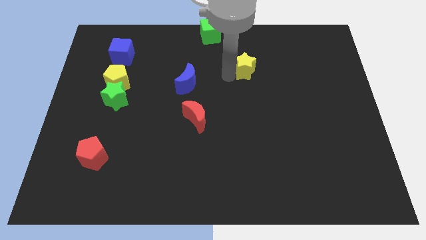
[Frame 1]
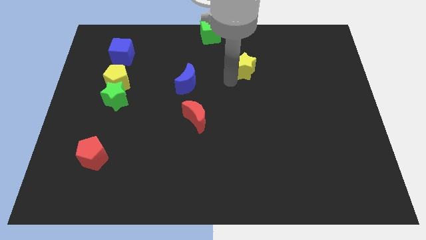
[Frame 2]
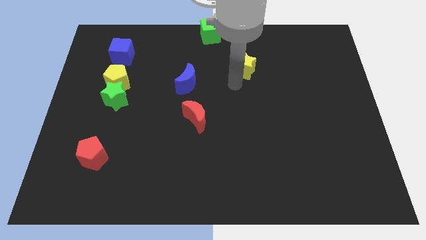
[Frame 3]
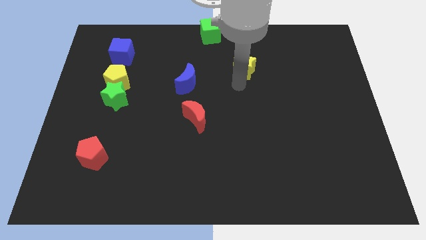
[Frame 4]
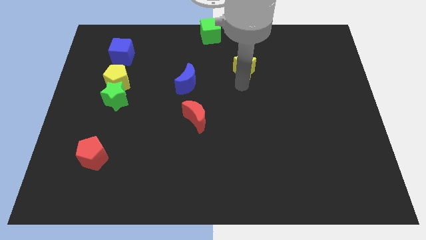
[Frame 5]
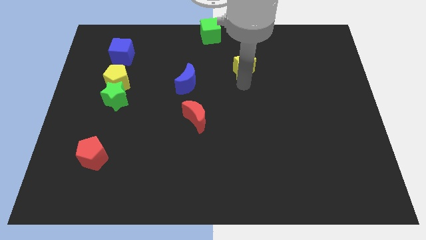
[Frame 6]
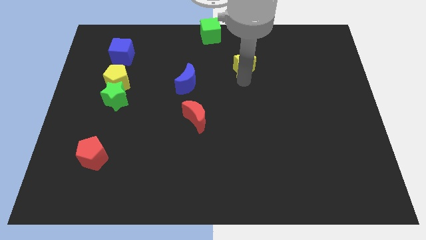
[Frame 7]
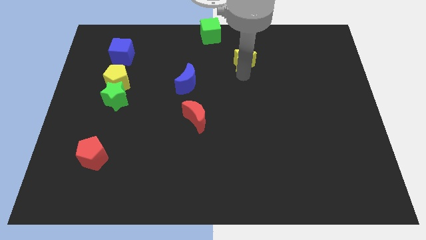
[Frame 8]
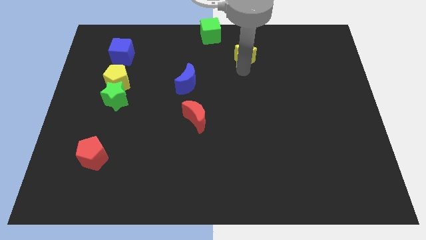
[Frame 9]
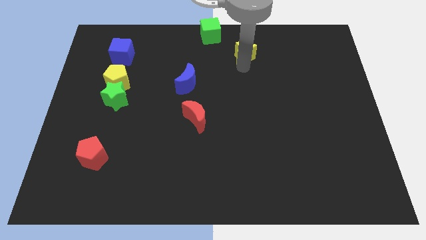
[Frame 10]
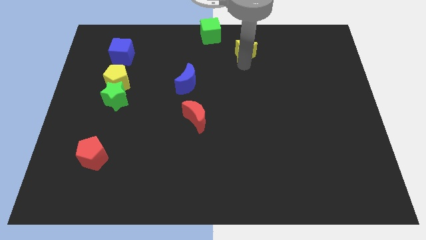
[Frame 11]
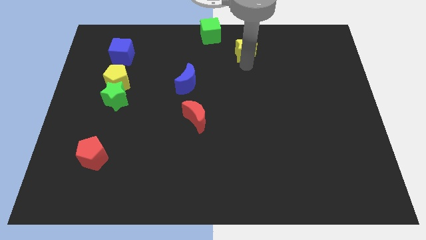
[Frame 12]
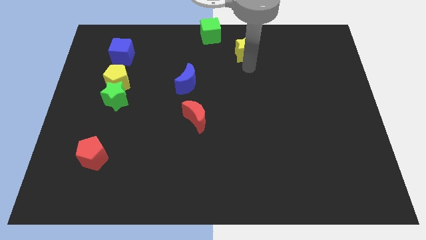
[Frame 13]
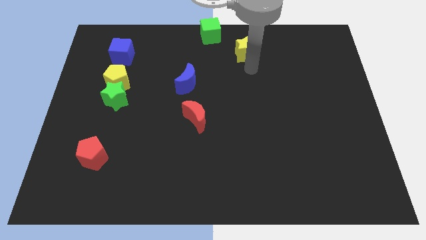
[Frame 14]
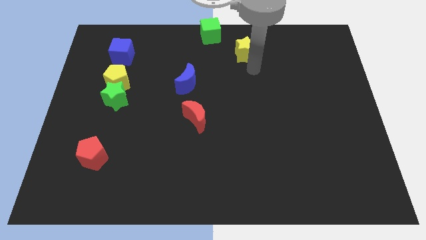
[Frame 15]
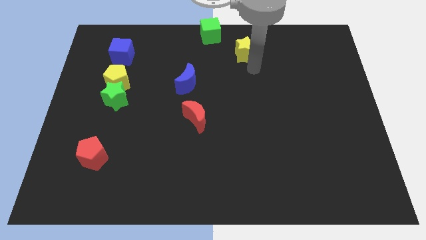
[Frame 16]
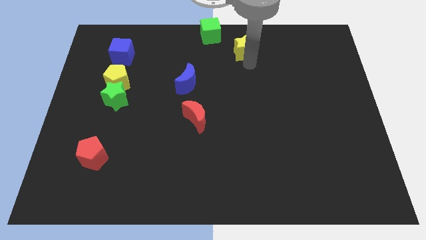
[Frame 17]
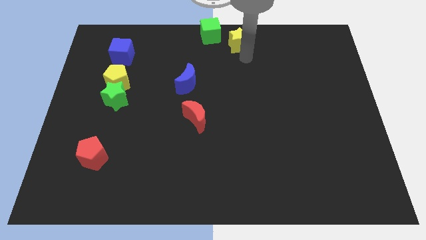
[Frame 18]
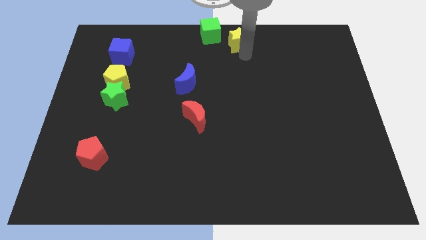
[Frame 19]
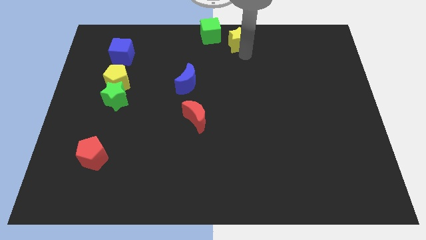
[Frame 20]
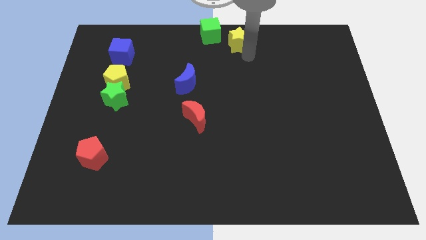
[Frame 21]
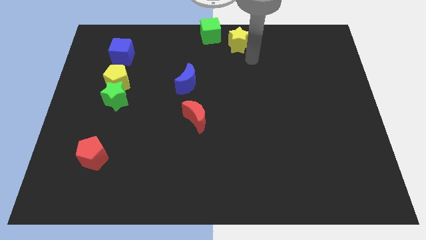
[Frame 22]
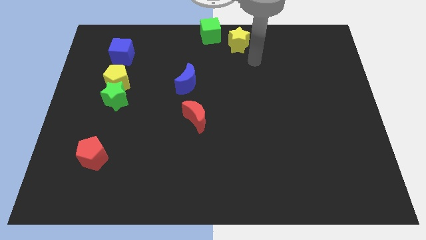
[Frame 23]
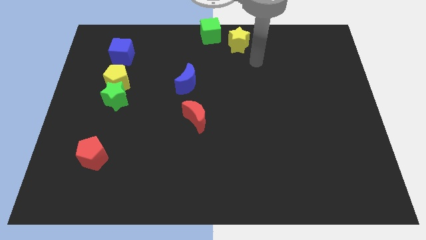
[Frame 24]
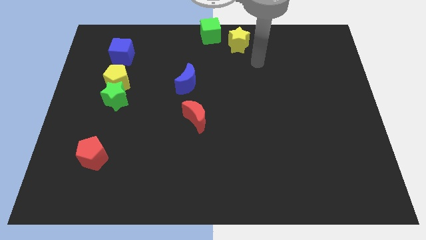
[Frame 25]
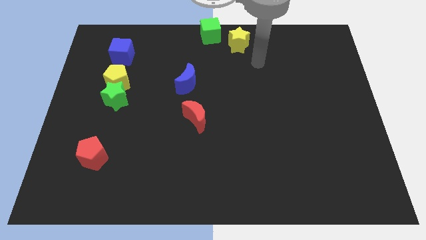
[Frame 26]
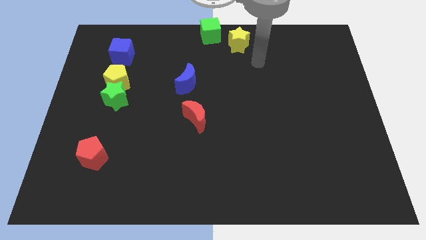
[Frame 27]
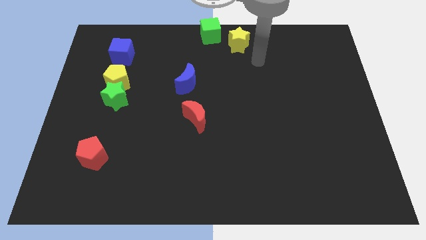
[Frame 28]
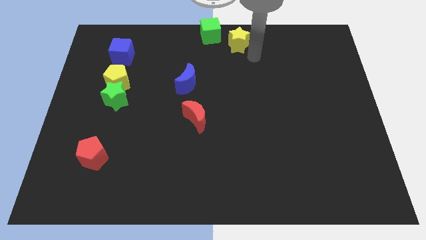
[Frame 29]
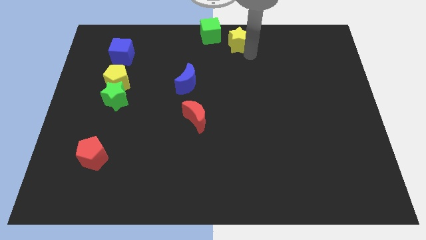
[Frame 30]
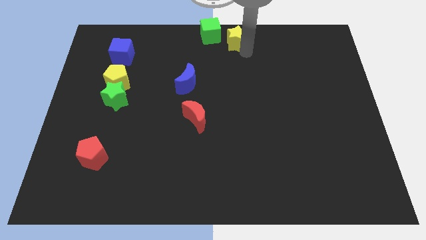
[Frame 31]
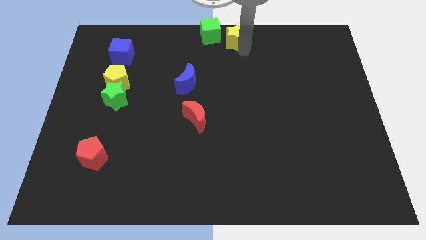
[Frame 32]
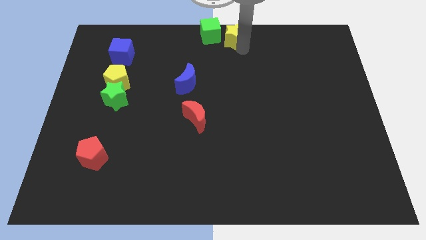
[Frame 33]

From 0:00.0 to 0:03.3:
drag the yellow star to top center of the board

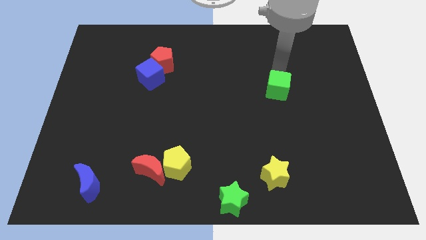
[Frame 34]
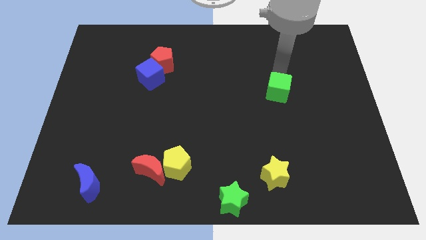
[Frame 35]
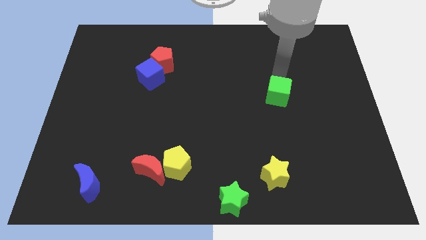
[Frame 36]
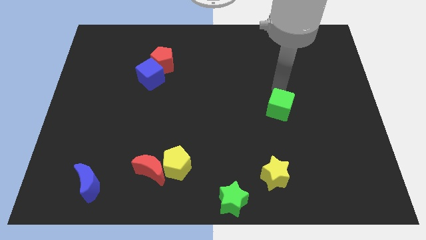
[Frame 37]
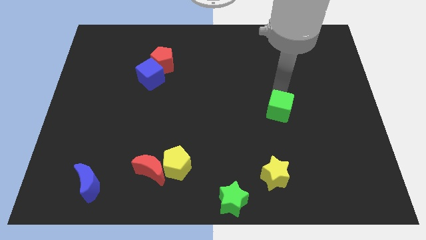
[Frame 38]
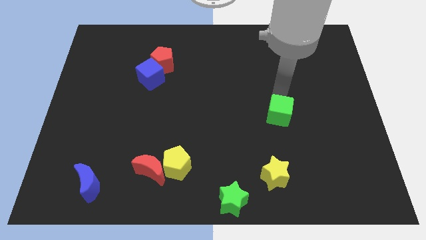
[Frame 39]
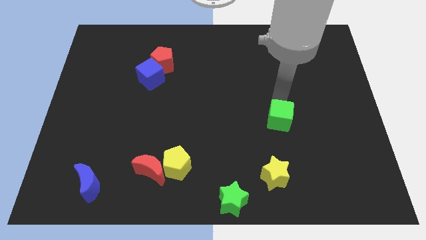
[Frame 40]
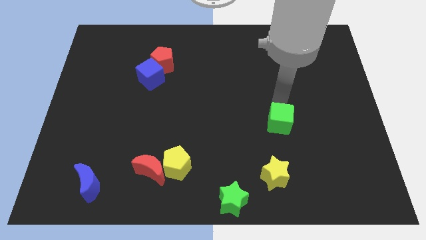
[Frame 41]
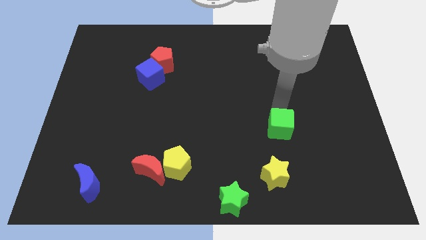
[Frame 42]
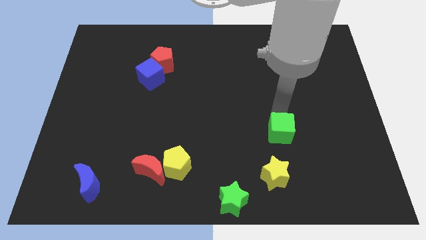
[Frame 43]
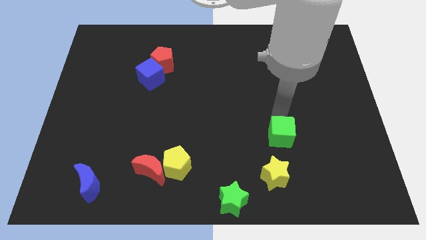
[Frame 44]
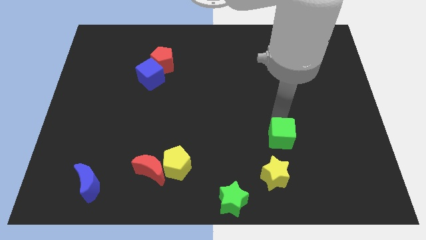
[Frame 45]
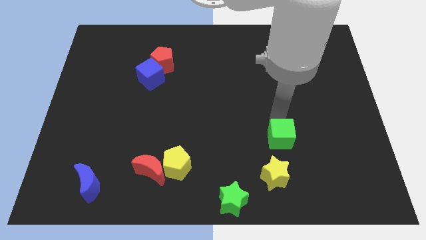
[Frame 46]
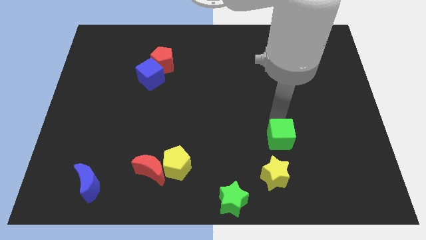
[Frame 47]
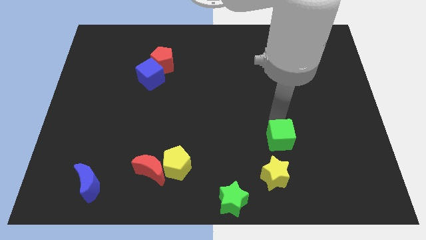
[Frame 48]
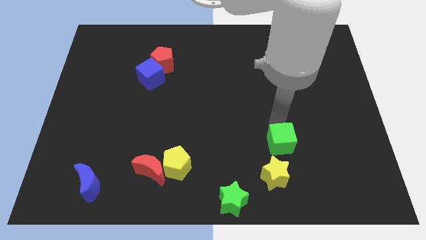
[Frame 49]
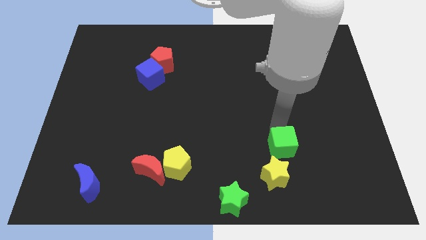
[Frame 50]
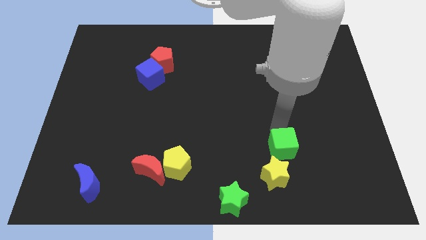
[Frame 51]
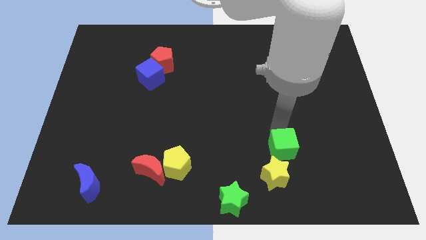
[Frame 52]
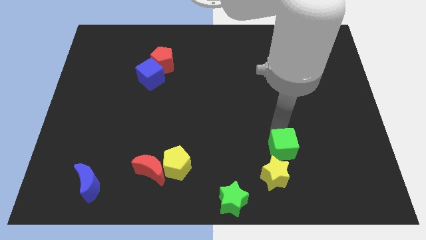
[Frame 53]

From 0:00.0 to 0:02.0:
place the green cube above the yellow star

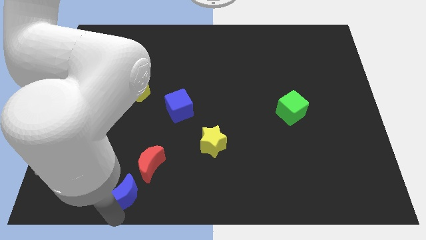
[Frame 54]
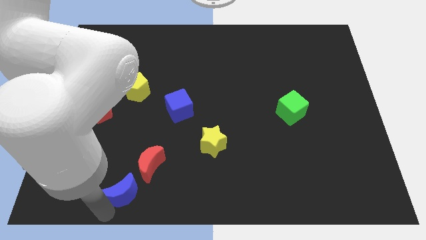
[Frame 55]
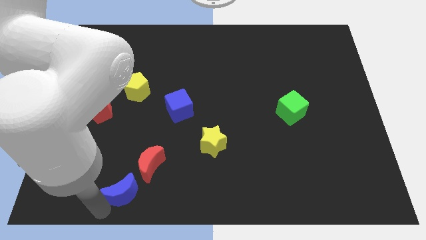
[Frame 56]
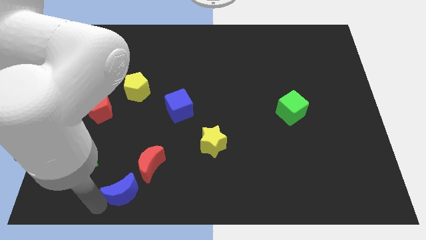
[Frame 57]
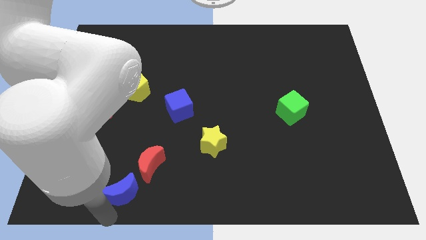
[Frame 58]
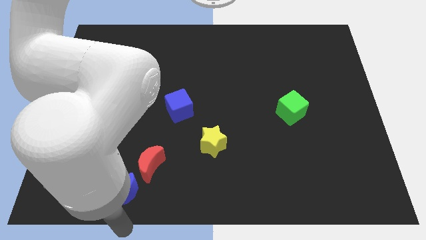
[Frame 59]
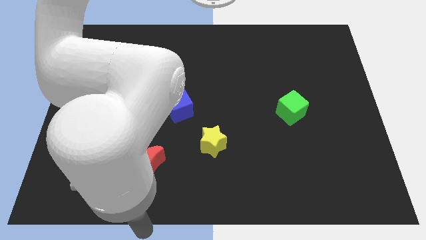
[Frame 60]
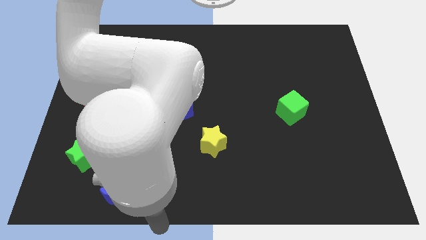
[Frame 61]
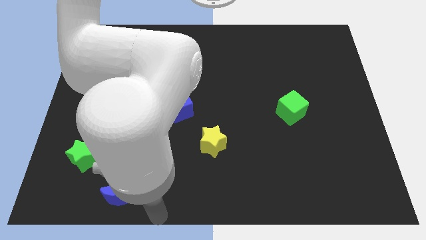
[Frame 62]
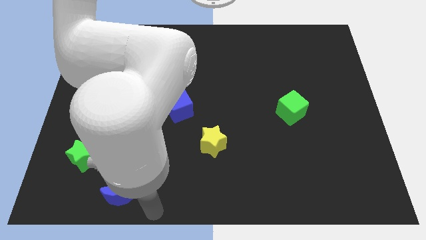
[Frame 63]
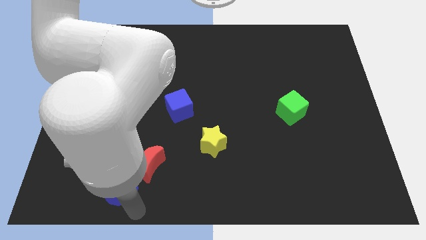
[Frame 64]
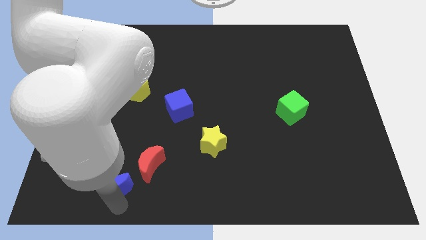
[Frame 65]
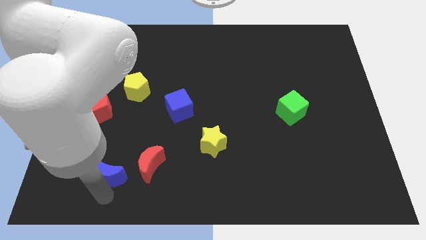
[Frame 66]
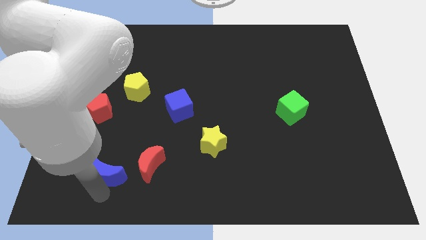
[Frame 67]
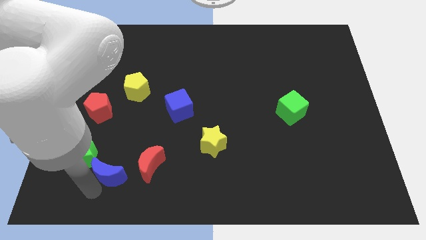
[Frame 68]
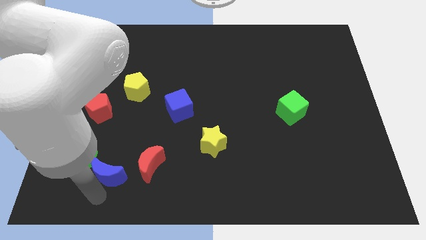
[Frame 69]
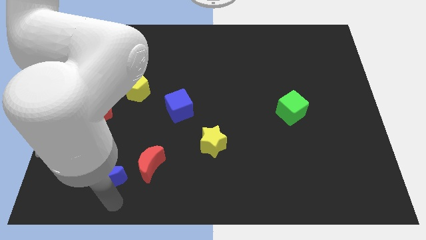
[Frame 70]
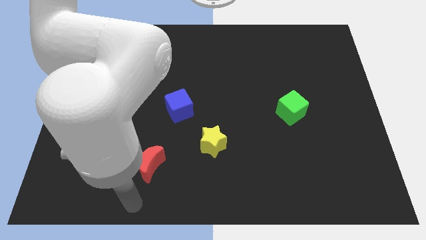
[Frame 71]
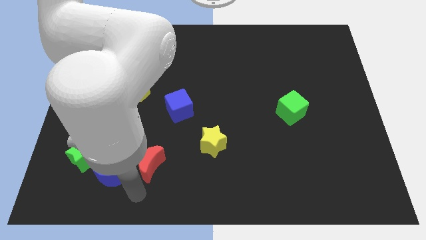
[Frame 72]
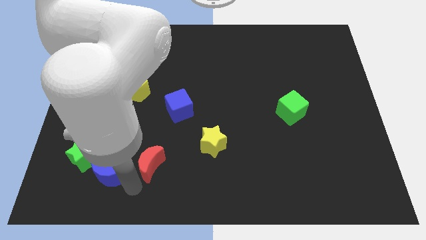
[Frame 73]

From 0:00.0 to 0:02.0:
place the blue moon to the right of the green star

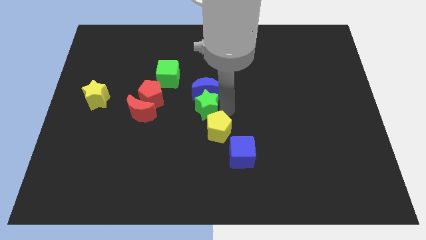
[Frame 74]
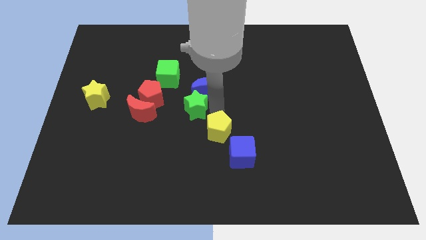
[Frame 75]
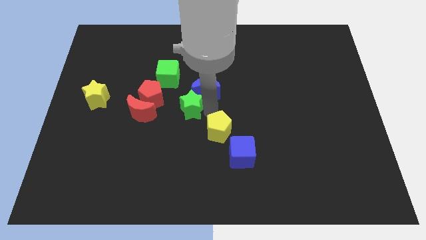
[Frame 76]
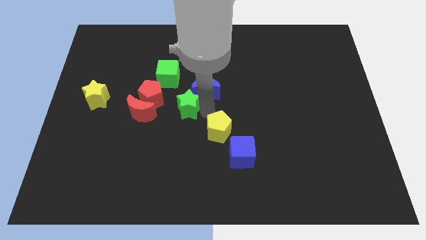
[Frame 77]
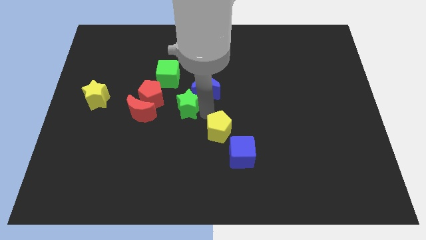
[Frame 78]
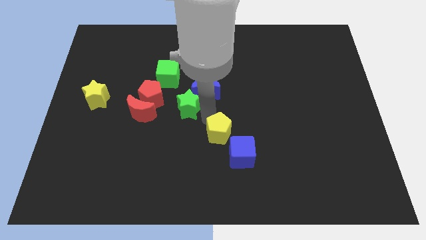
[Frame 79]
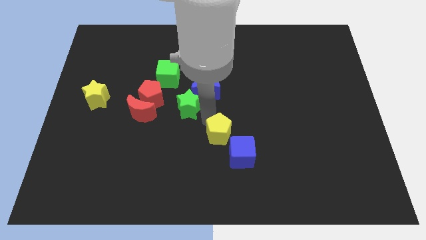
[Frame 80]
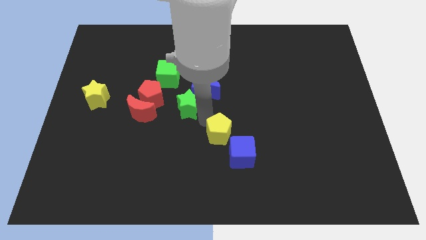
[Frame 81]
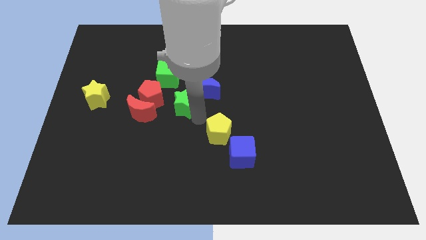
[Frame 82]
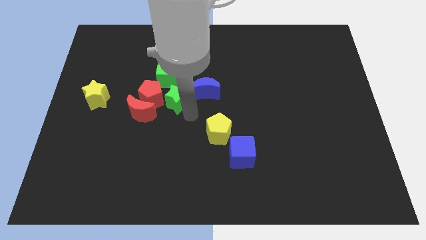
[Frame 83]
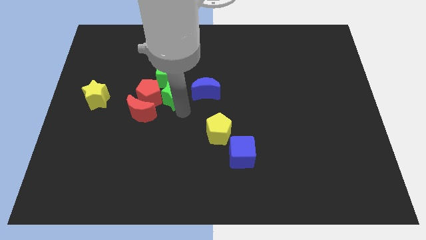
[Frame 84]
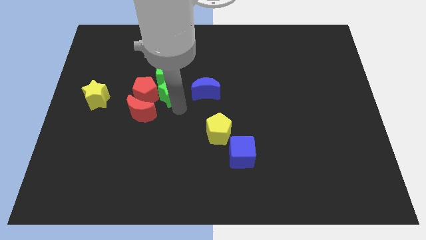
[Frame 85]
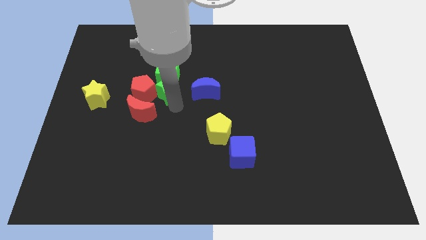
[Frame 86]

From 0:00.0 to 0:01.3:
move the green star to the bottom of the green cube

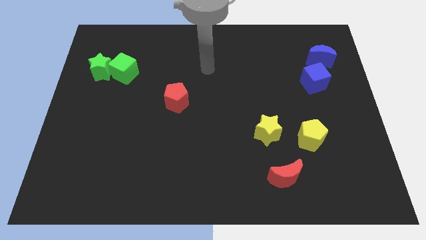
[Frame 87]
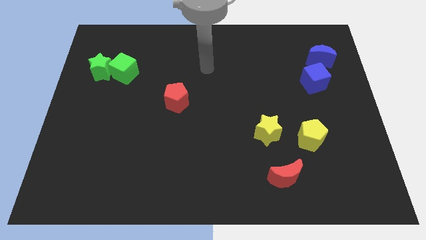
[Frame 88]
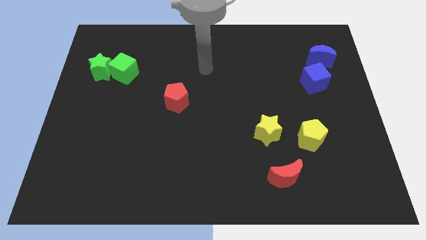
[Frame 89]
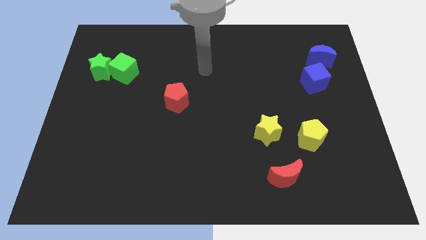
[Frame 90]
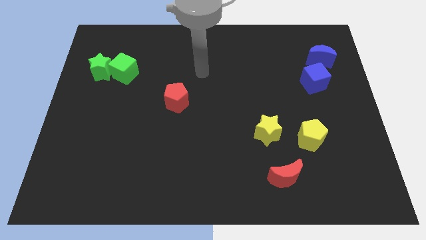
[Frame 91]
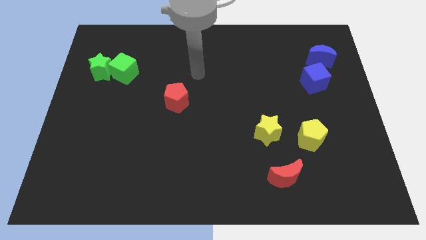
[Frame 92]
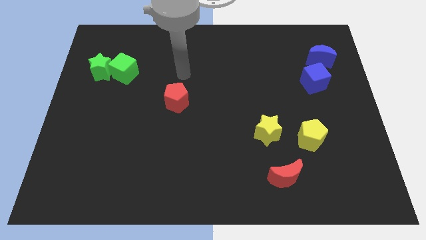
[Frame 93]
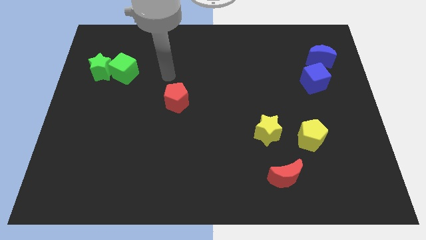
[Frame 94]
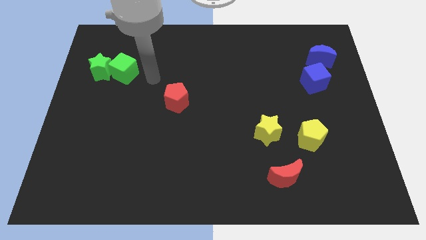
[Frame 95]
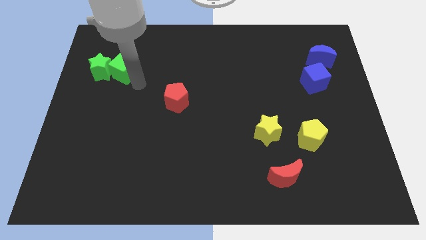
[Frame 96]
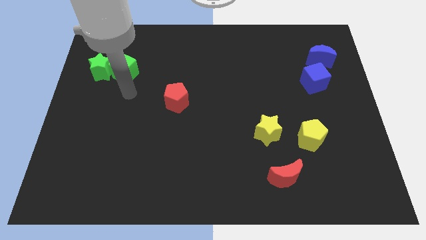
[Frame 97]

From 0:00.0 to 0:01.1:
go near the green cube
